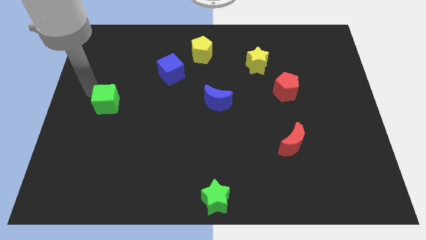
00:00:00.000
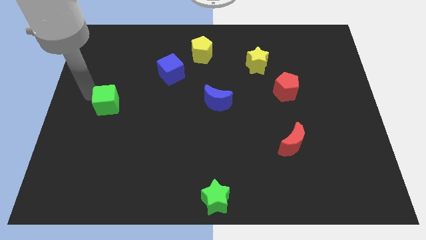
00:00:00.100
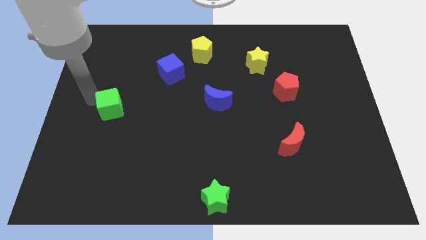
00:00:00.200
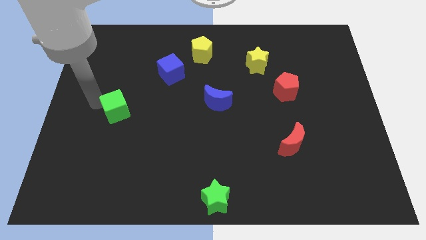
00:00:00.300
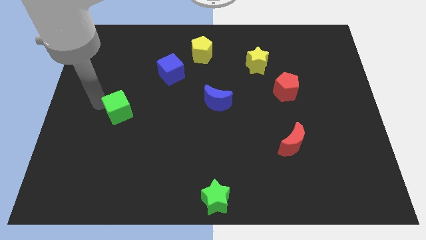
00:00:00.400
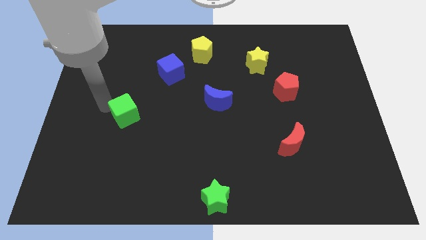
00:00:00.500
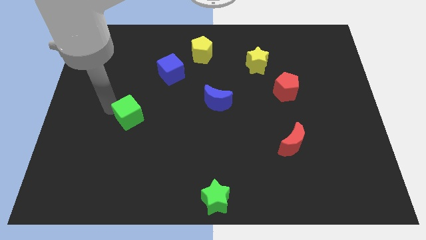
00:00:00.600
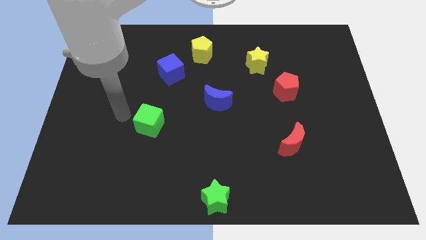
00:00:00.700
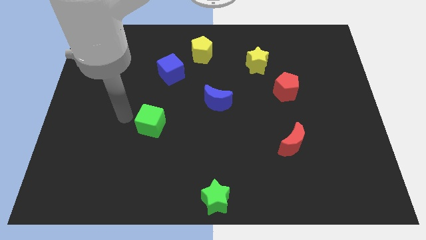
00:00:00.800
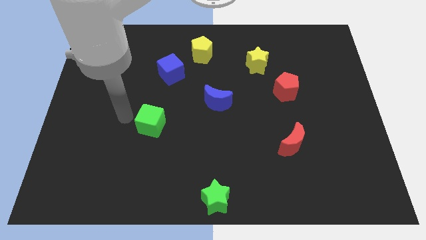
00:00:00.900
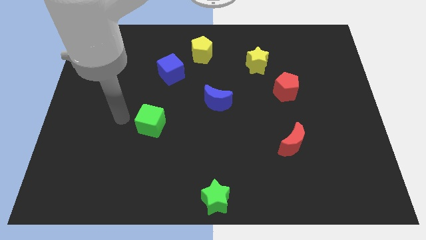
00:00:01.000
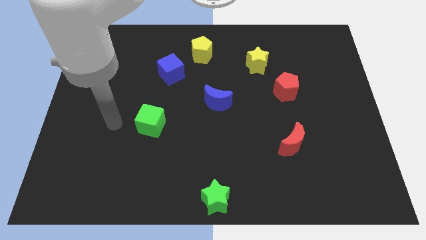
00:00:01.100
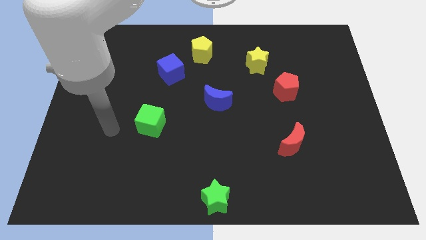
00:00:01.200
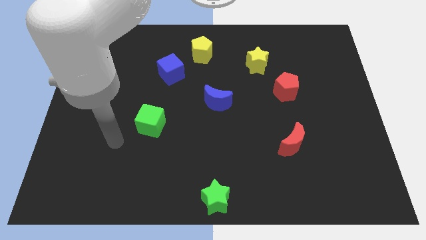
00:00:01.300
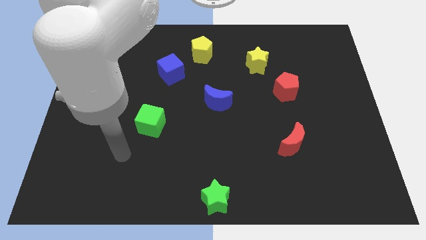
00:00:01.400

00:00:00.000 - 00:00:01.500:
place green cube to the bottom of the blue cube

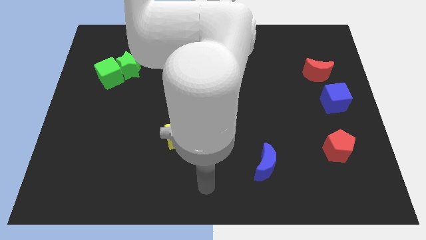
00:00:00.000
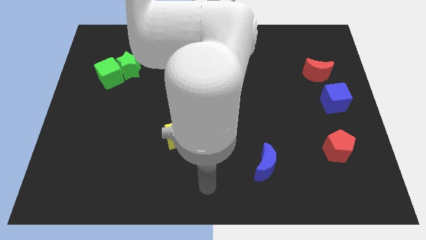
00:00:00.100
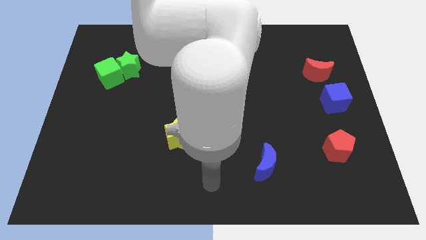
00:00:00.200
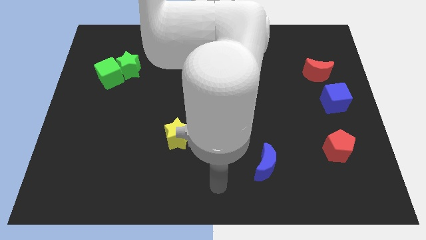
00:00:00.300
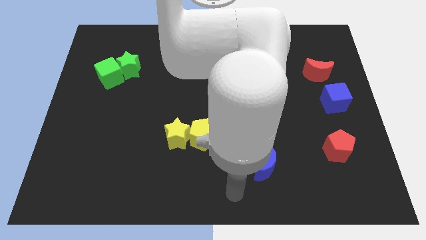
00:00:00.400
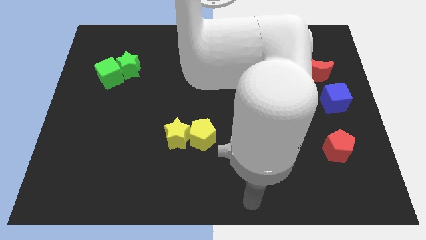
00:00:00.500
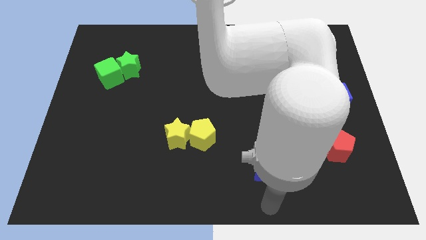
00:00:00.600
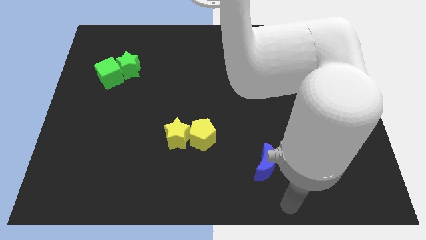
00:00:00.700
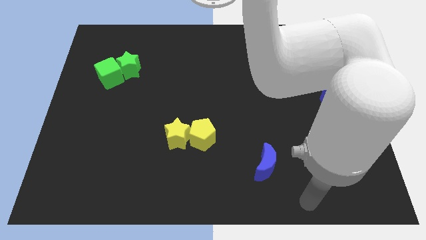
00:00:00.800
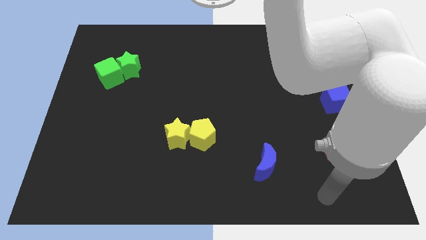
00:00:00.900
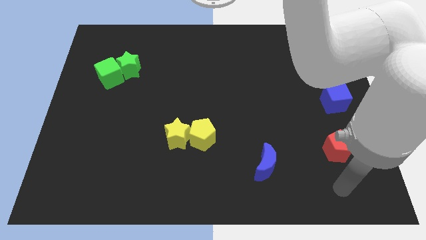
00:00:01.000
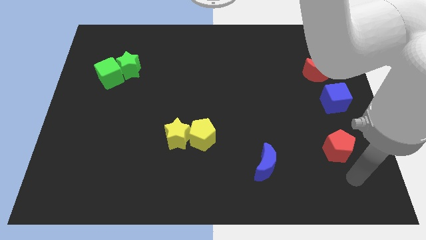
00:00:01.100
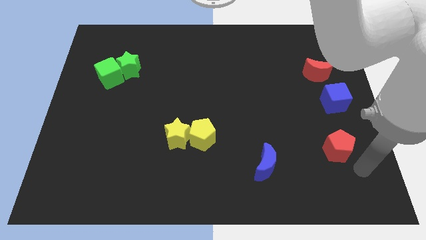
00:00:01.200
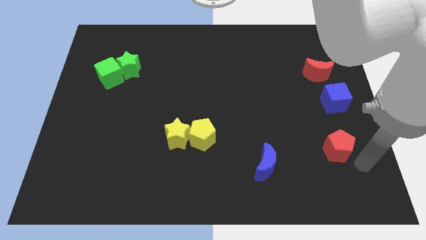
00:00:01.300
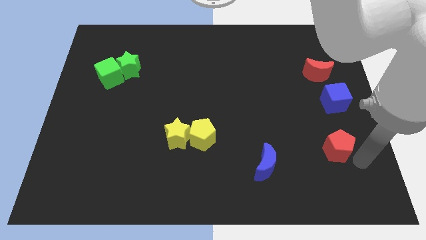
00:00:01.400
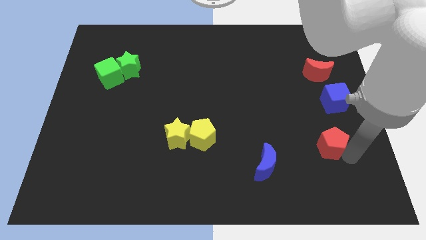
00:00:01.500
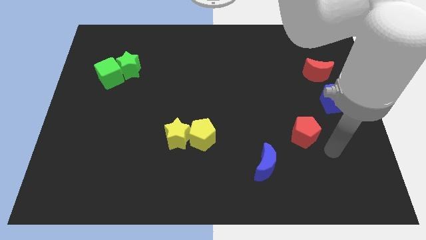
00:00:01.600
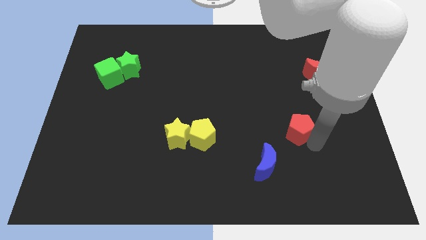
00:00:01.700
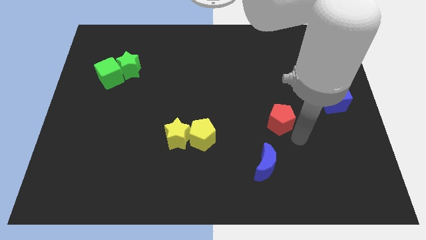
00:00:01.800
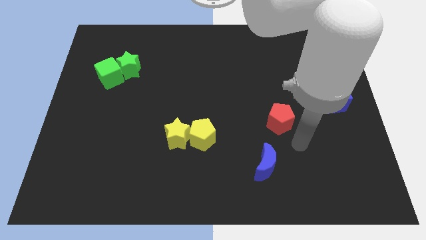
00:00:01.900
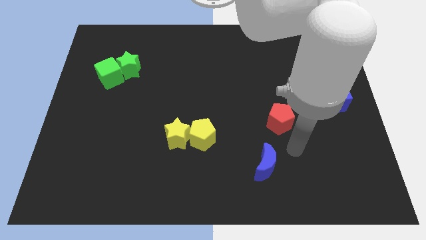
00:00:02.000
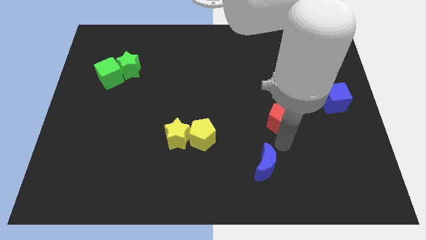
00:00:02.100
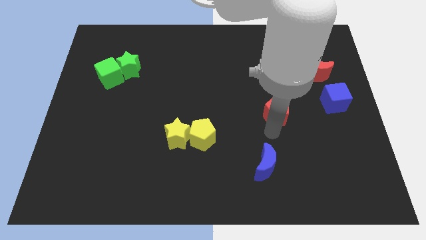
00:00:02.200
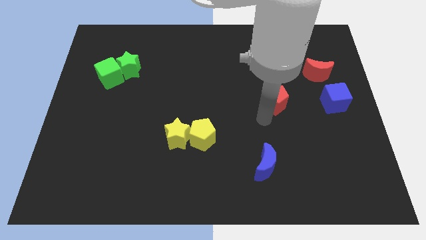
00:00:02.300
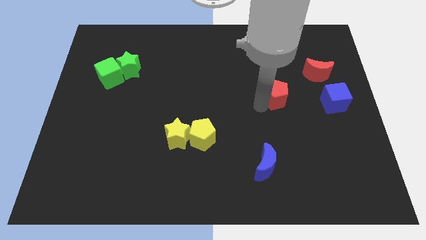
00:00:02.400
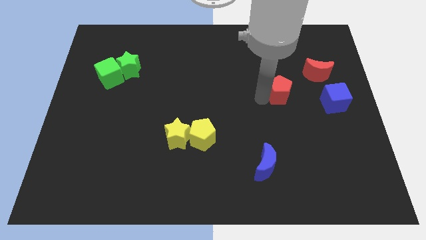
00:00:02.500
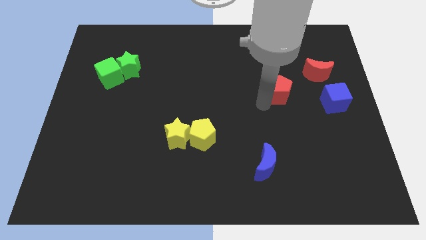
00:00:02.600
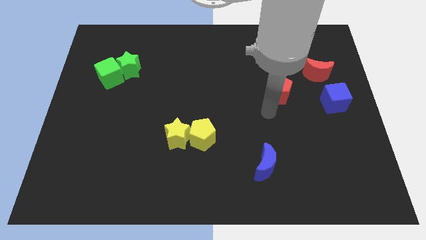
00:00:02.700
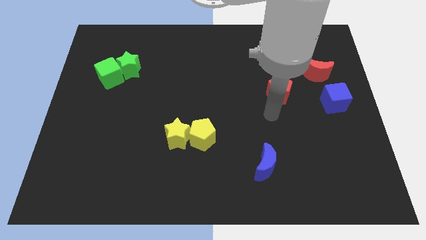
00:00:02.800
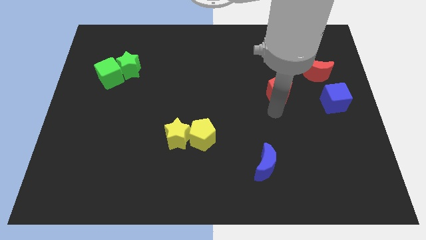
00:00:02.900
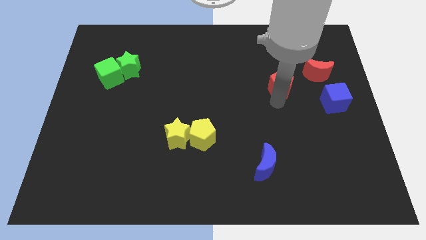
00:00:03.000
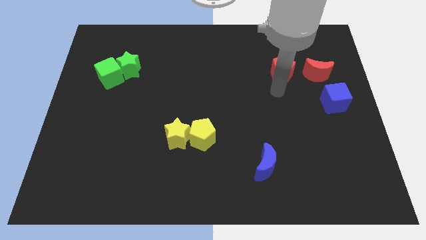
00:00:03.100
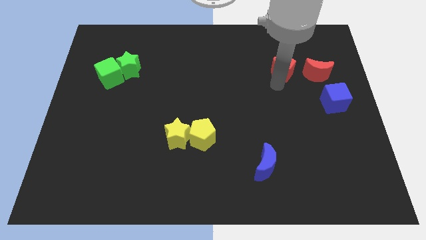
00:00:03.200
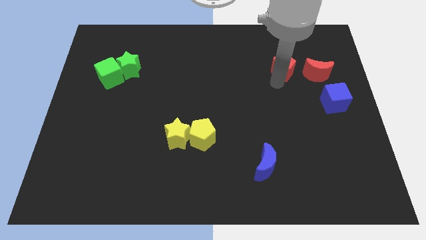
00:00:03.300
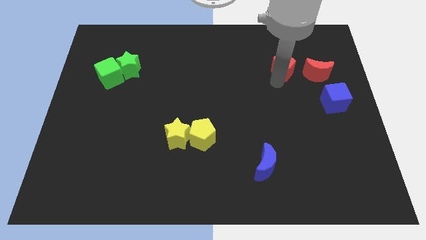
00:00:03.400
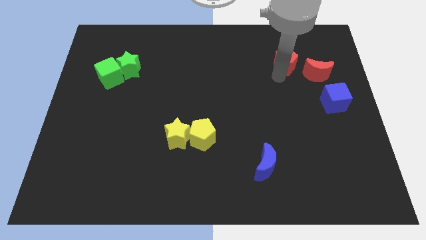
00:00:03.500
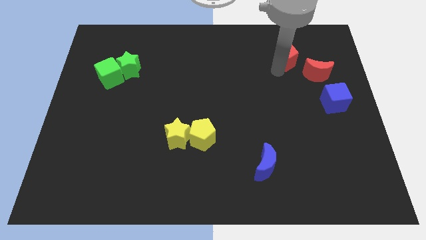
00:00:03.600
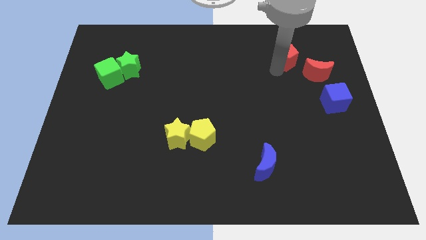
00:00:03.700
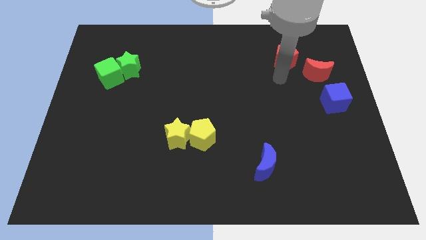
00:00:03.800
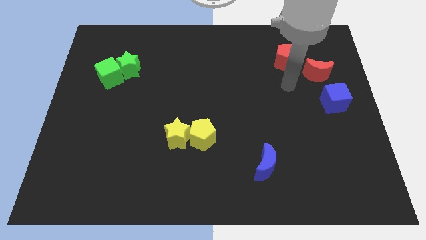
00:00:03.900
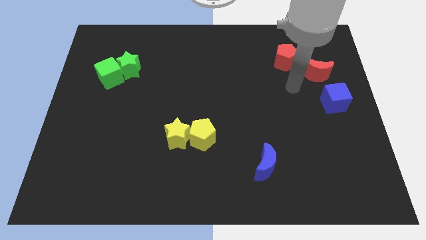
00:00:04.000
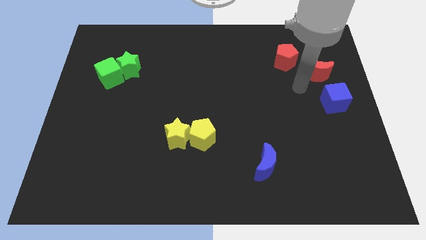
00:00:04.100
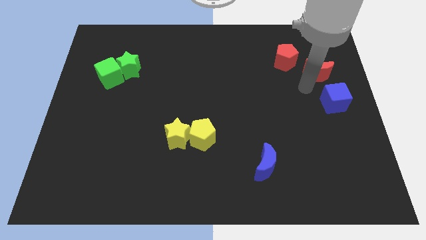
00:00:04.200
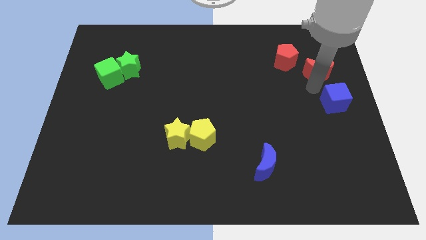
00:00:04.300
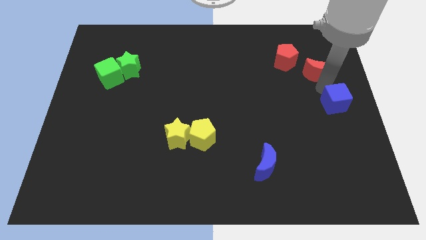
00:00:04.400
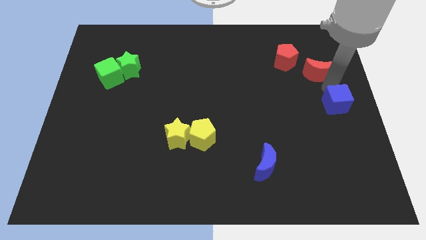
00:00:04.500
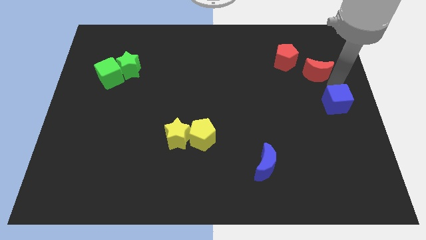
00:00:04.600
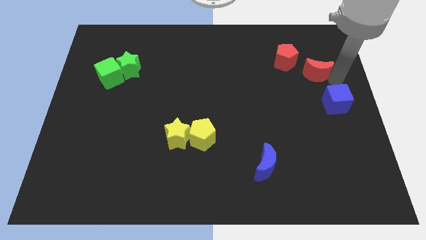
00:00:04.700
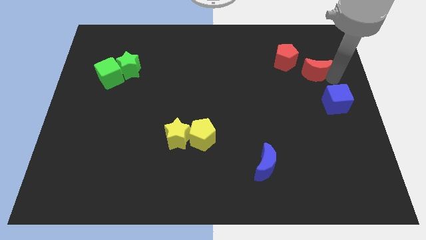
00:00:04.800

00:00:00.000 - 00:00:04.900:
push the red pentagon to the left of the red crescent

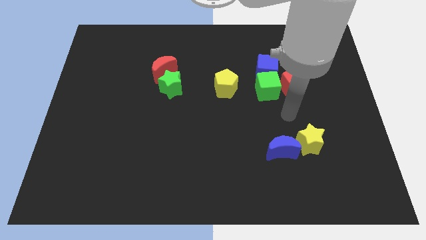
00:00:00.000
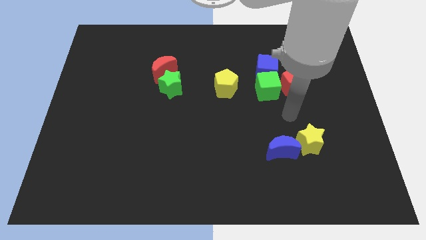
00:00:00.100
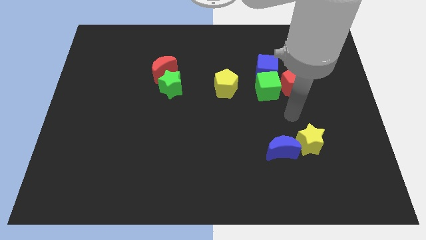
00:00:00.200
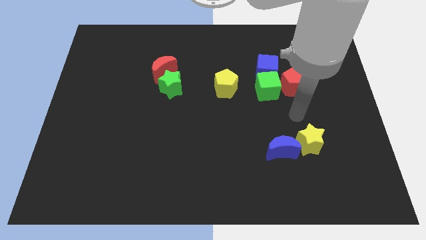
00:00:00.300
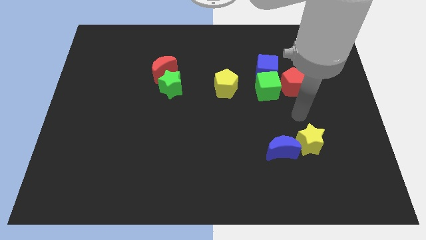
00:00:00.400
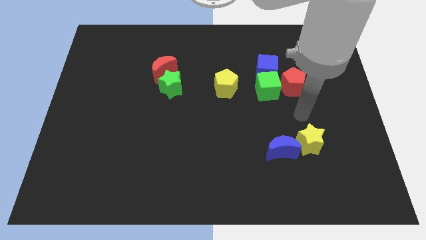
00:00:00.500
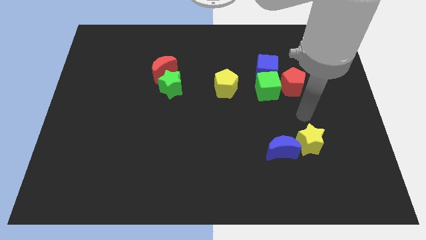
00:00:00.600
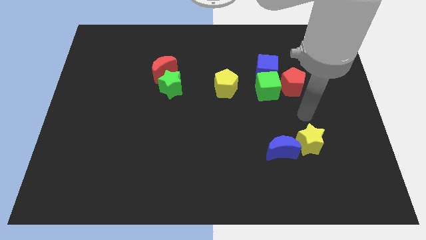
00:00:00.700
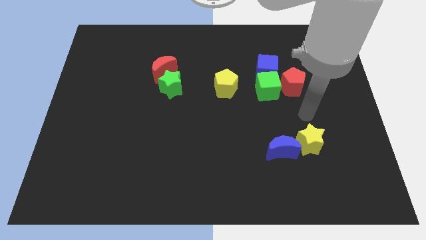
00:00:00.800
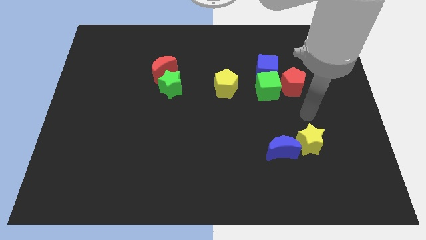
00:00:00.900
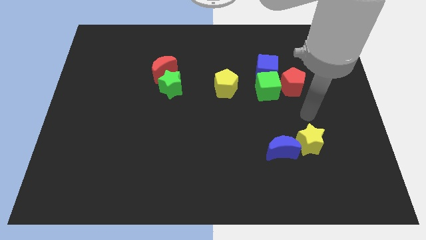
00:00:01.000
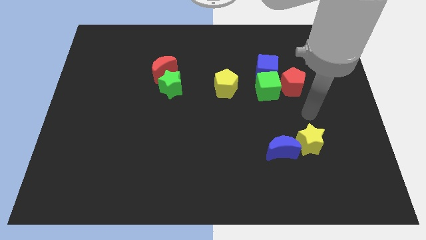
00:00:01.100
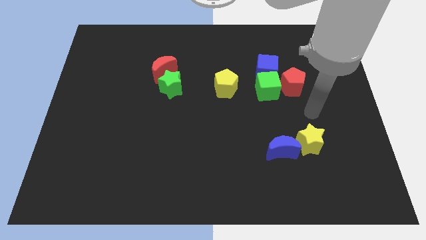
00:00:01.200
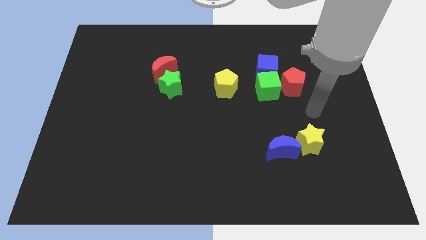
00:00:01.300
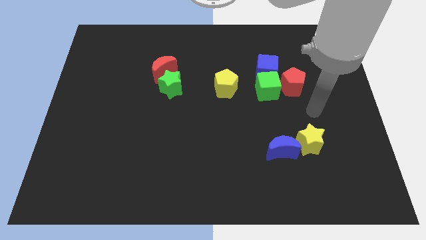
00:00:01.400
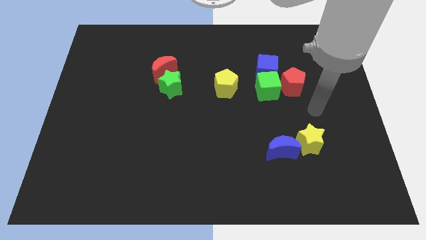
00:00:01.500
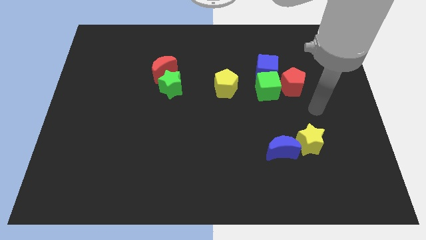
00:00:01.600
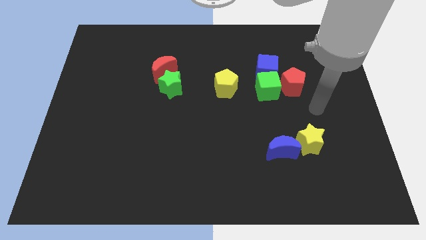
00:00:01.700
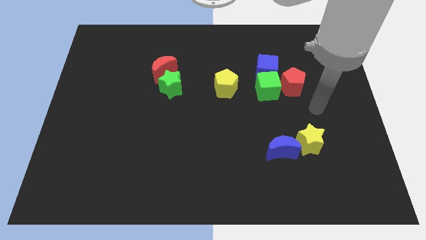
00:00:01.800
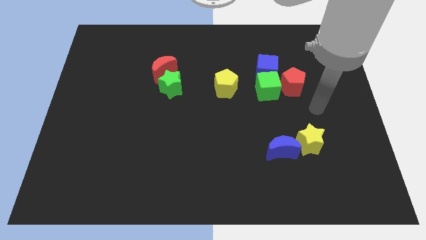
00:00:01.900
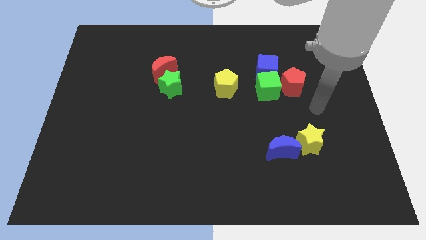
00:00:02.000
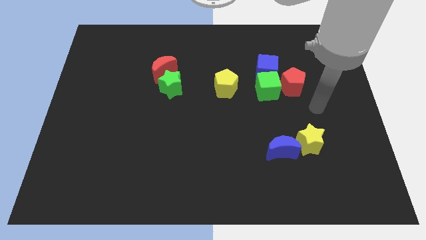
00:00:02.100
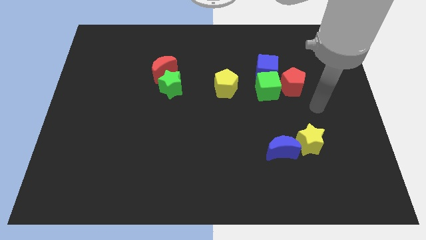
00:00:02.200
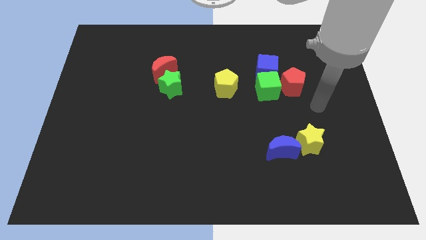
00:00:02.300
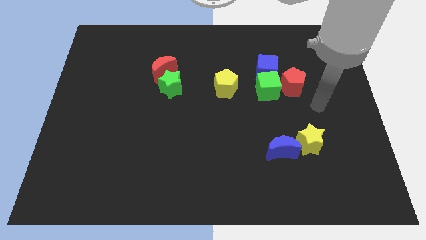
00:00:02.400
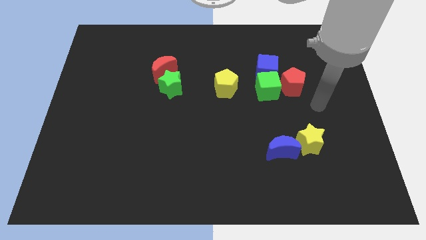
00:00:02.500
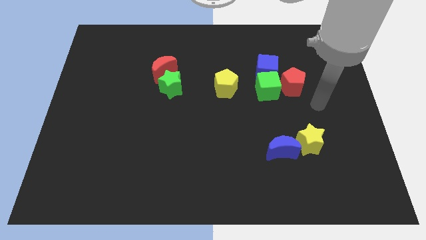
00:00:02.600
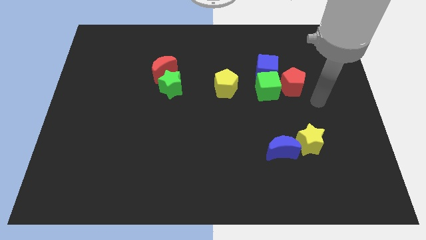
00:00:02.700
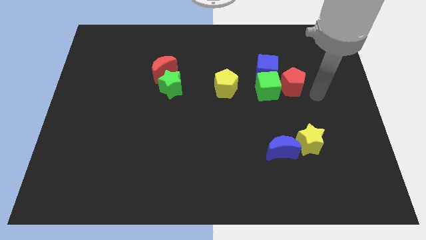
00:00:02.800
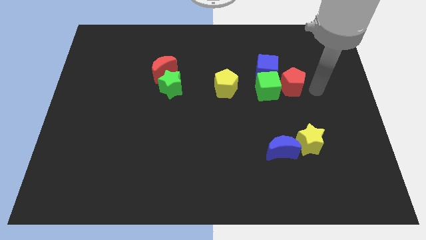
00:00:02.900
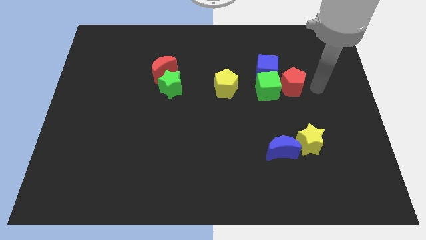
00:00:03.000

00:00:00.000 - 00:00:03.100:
move your arm towards the right center of the board
